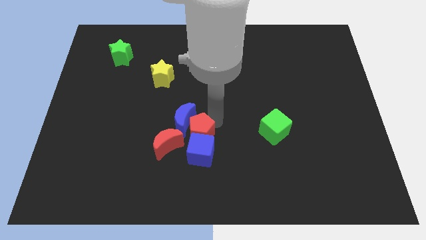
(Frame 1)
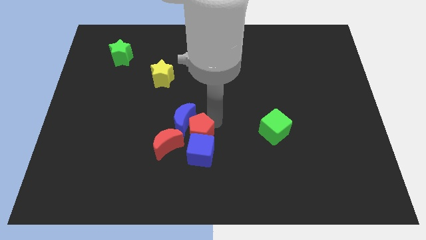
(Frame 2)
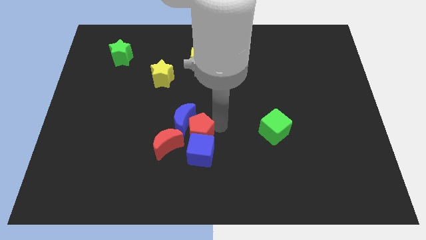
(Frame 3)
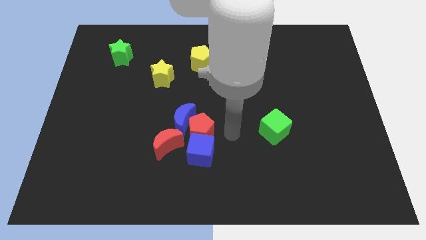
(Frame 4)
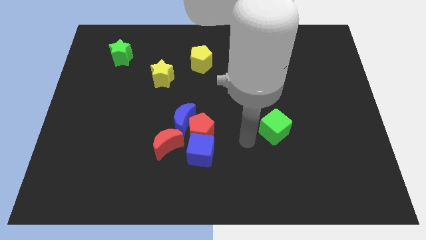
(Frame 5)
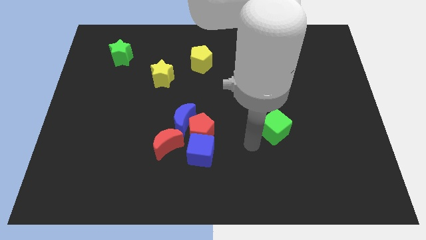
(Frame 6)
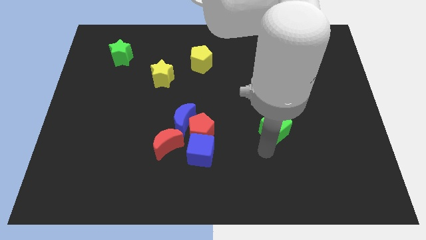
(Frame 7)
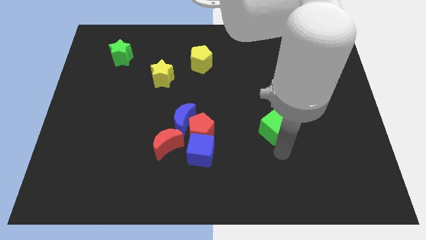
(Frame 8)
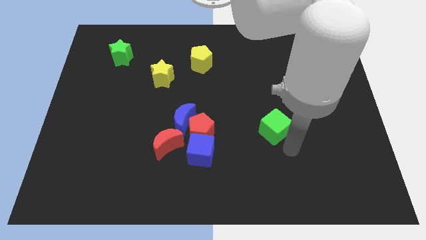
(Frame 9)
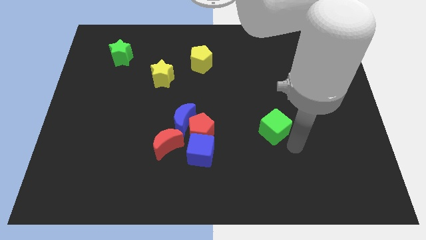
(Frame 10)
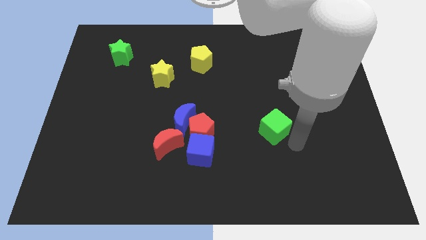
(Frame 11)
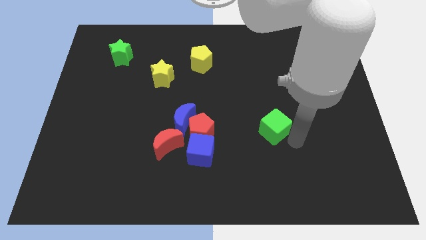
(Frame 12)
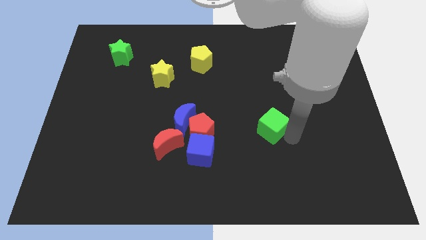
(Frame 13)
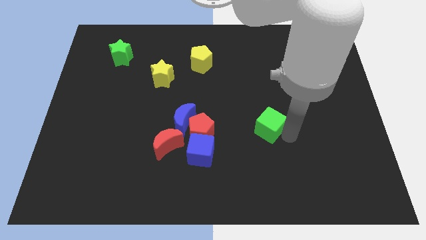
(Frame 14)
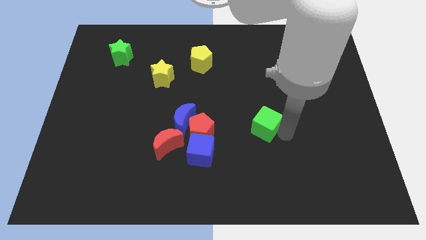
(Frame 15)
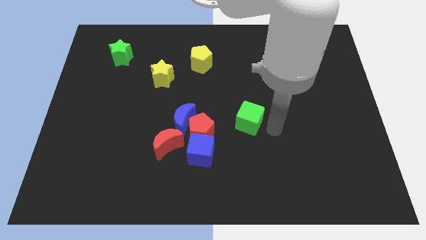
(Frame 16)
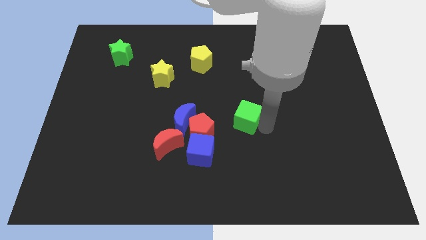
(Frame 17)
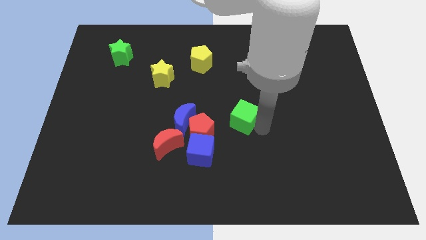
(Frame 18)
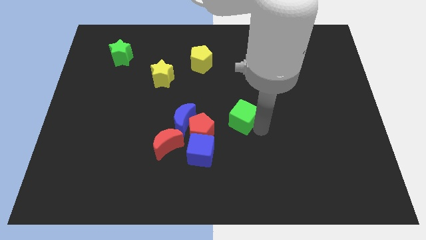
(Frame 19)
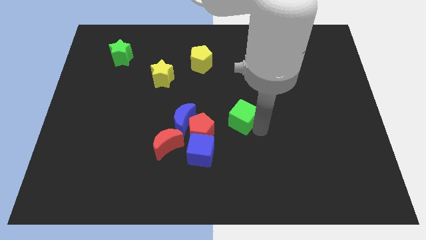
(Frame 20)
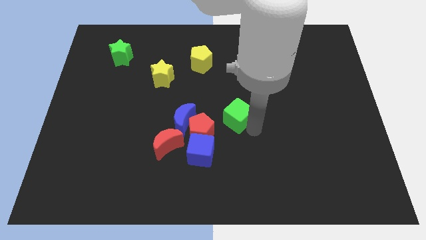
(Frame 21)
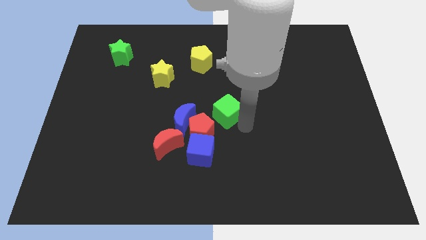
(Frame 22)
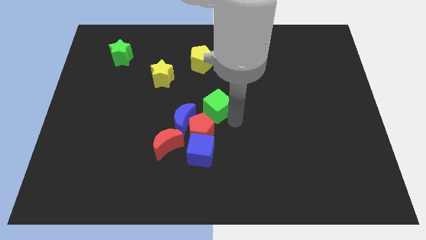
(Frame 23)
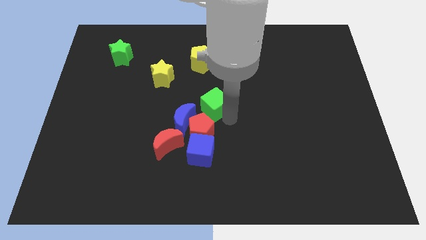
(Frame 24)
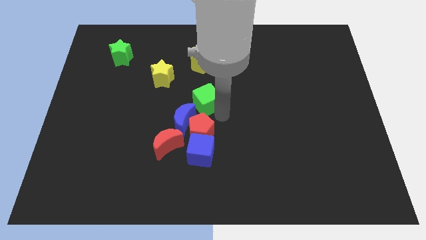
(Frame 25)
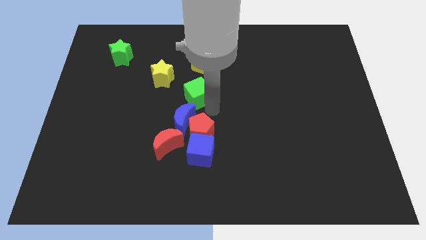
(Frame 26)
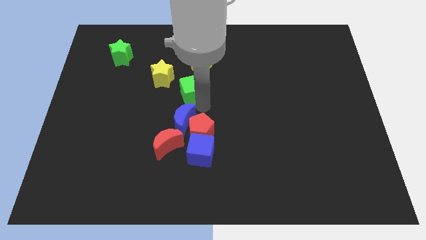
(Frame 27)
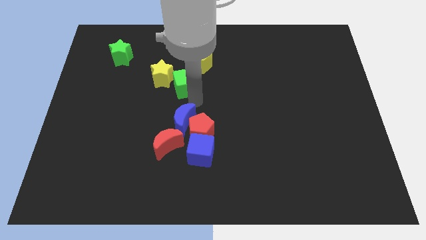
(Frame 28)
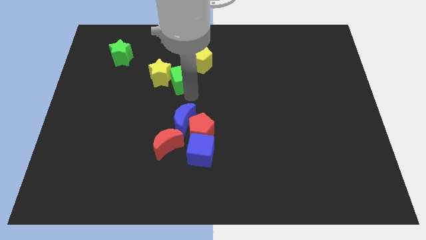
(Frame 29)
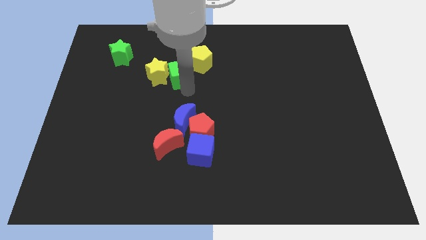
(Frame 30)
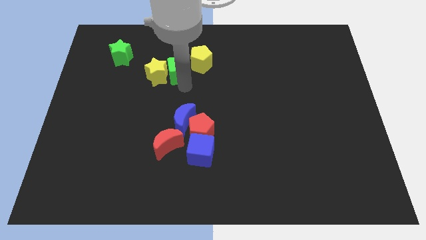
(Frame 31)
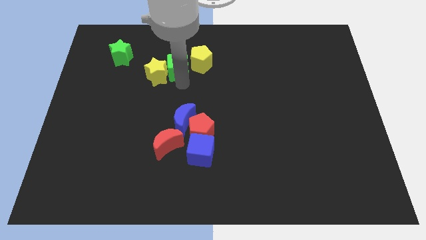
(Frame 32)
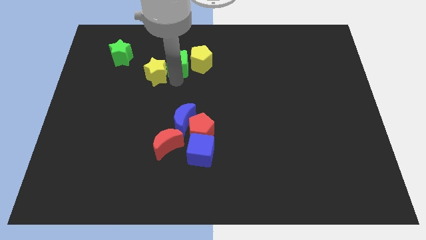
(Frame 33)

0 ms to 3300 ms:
move the green cube in between the yellow blocks

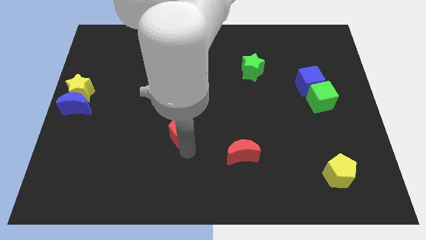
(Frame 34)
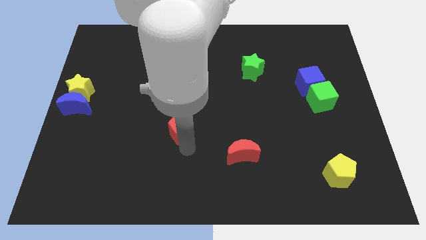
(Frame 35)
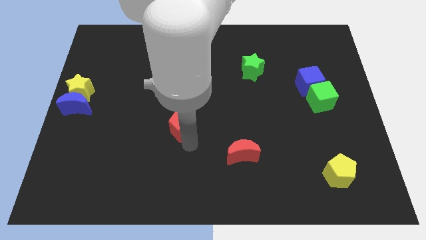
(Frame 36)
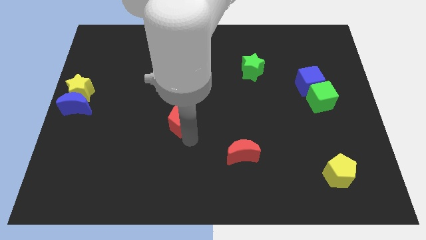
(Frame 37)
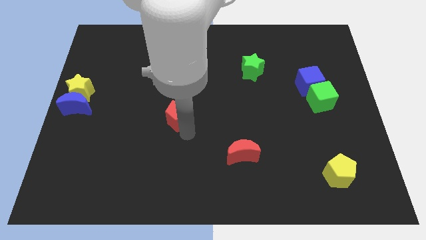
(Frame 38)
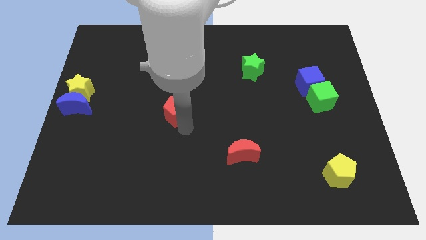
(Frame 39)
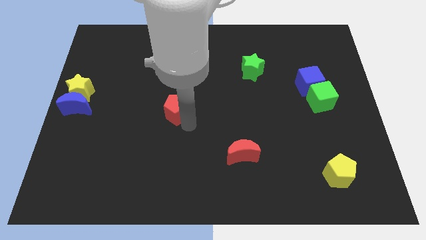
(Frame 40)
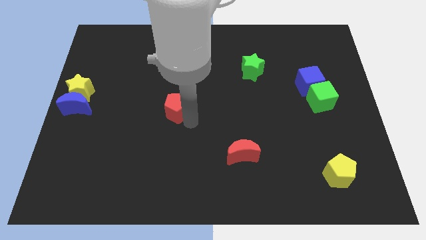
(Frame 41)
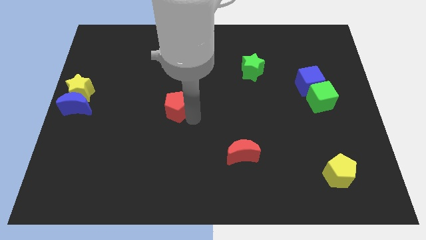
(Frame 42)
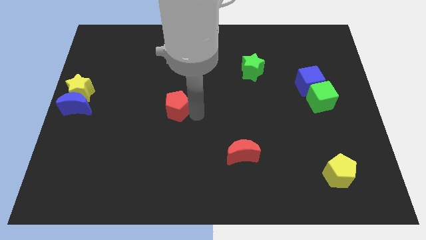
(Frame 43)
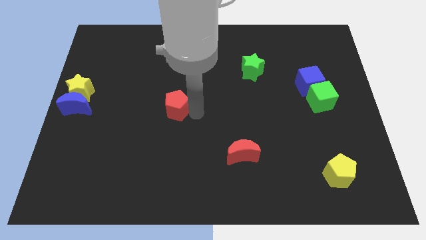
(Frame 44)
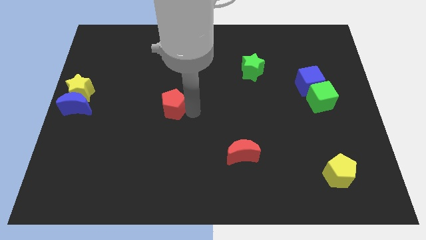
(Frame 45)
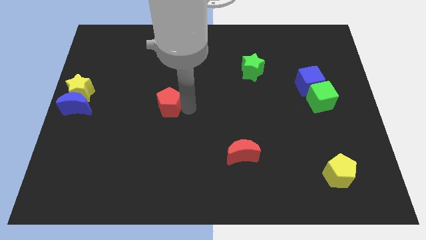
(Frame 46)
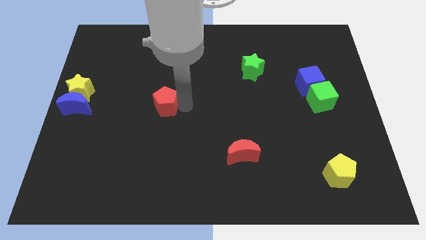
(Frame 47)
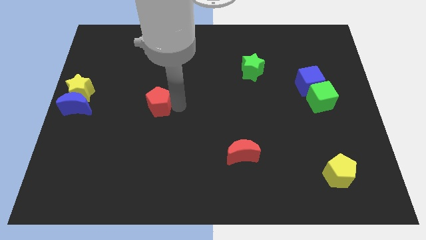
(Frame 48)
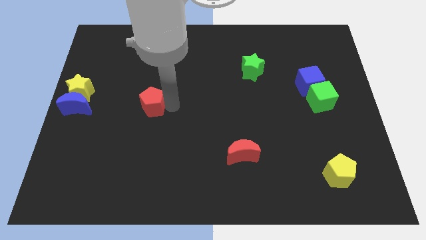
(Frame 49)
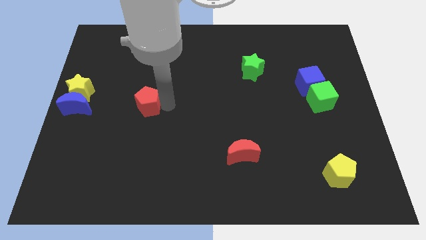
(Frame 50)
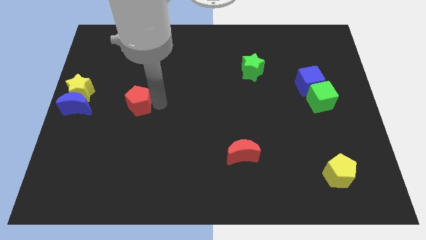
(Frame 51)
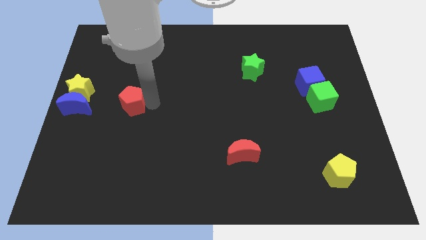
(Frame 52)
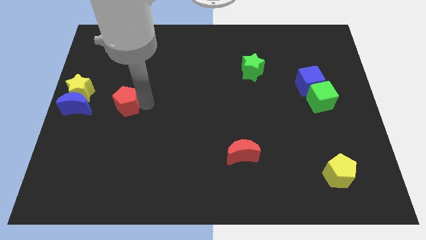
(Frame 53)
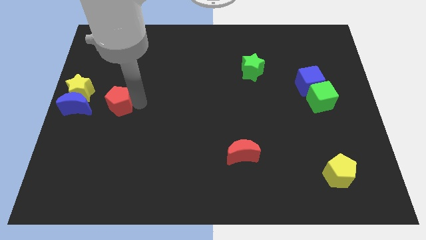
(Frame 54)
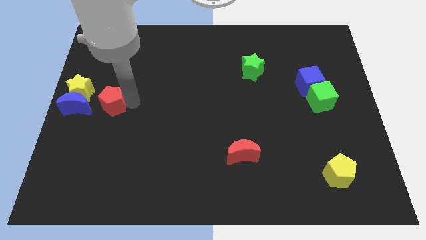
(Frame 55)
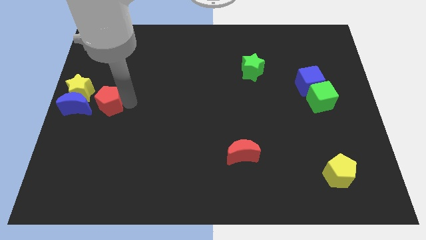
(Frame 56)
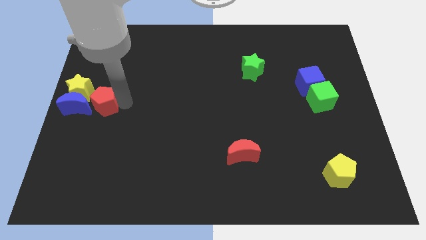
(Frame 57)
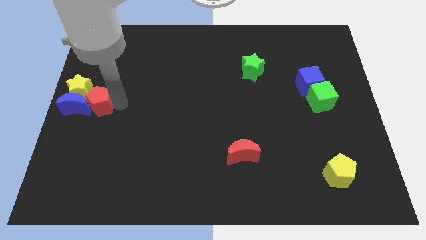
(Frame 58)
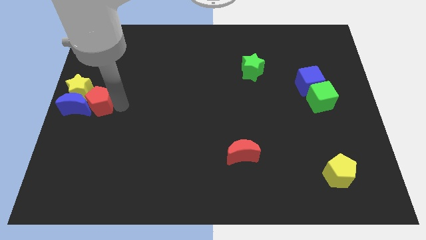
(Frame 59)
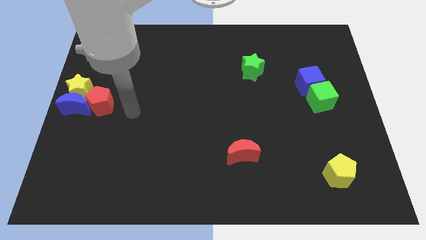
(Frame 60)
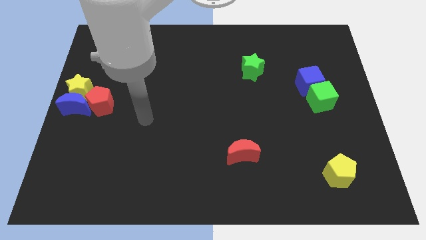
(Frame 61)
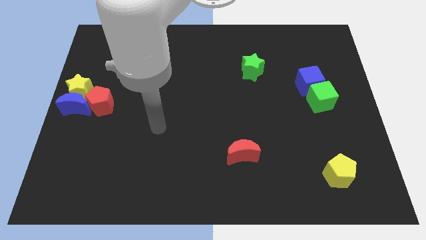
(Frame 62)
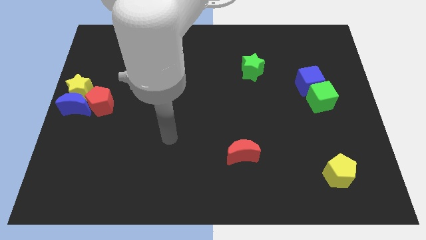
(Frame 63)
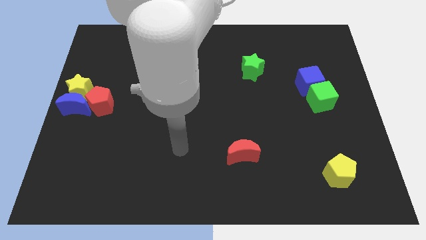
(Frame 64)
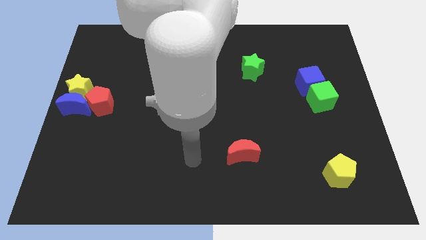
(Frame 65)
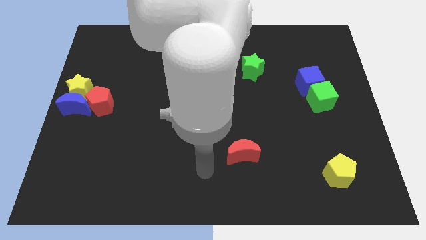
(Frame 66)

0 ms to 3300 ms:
move the red pentagon into the blue moon

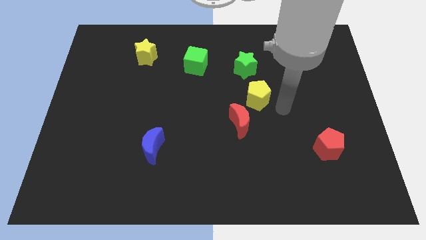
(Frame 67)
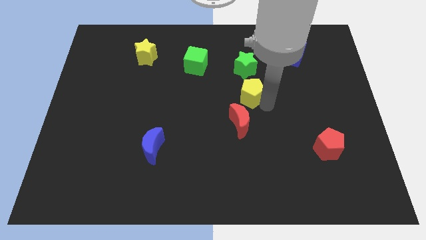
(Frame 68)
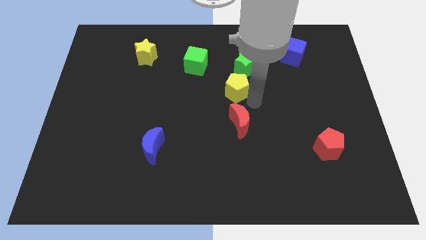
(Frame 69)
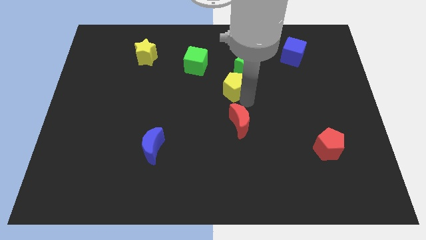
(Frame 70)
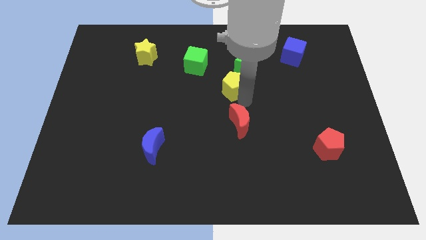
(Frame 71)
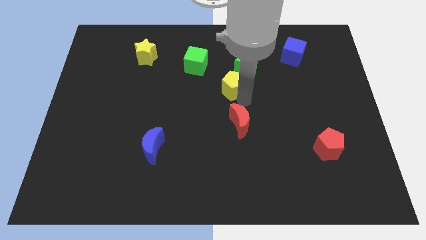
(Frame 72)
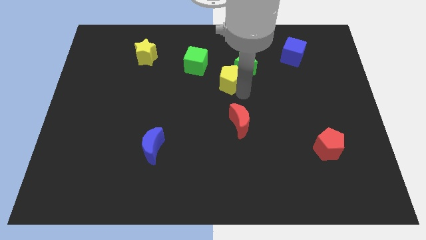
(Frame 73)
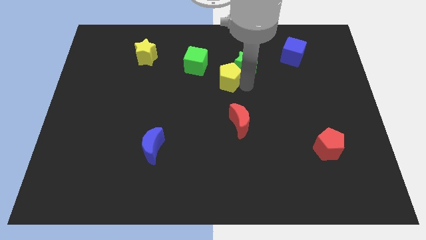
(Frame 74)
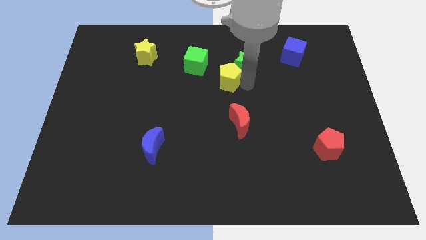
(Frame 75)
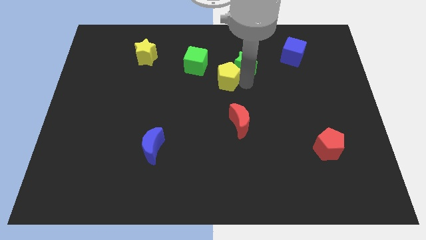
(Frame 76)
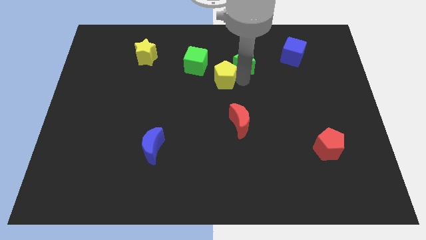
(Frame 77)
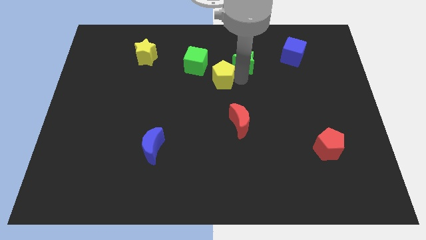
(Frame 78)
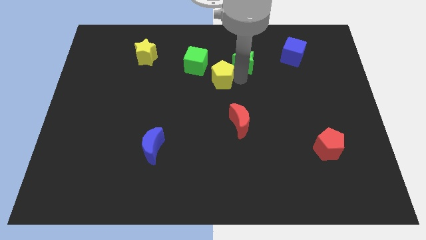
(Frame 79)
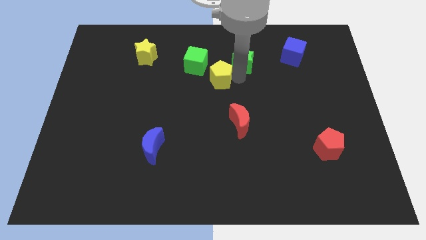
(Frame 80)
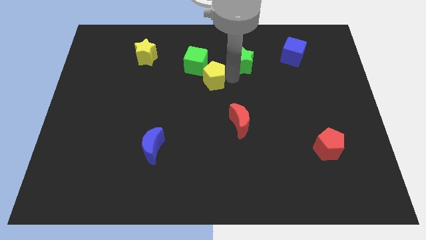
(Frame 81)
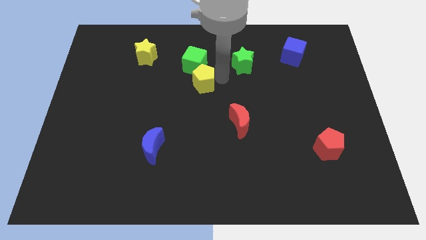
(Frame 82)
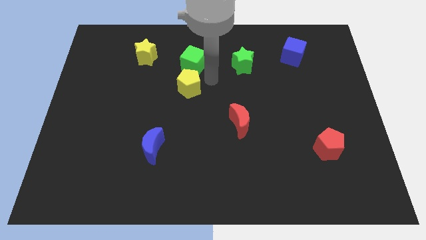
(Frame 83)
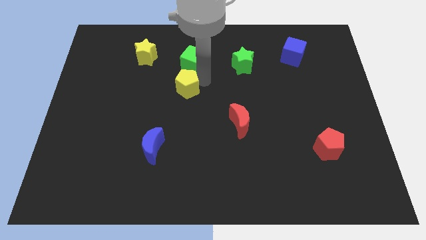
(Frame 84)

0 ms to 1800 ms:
push the yellow pentagon to the bottom side of the green cube

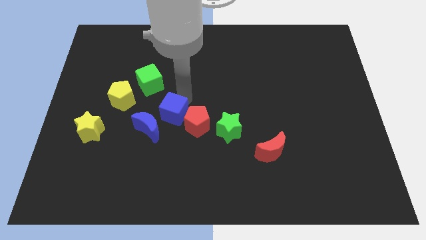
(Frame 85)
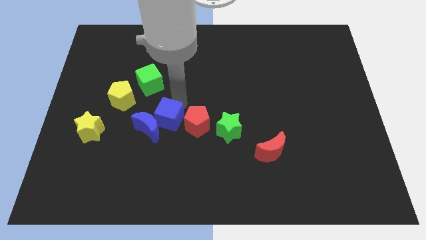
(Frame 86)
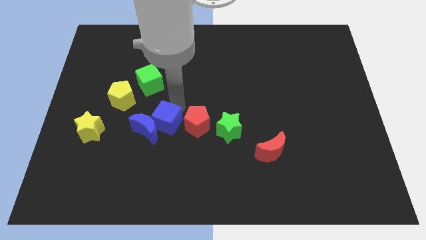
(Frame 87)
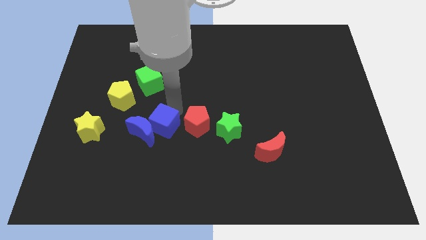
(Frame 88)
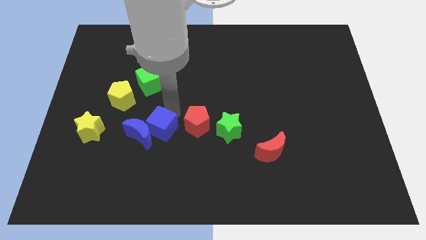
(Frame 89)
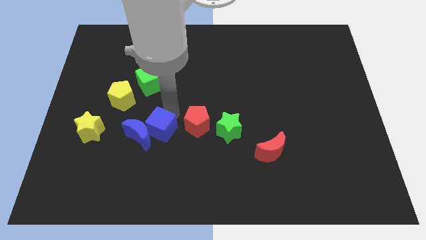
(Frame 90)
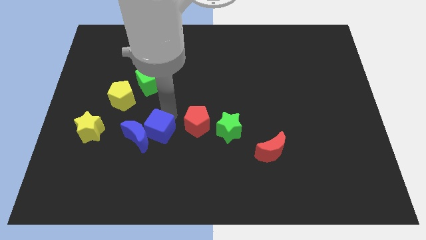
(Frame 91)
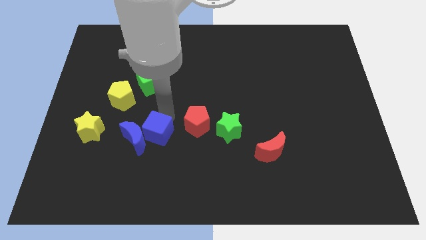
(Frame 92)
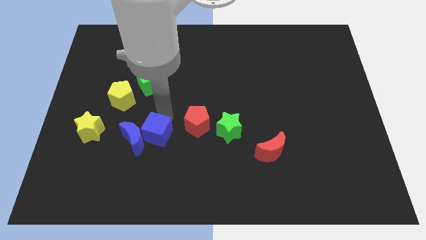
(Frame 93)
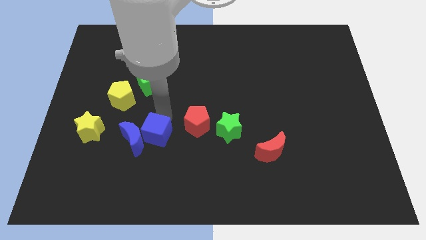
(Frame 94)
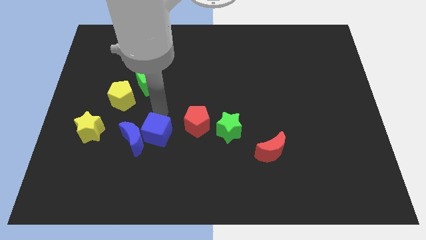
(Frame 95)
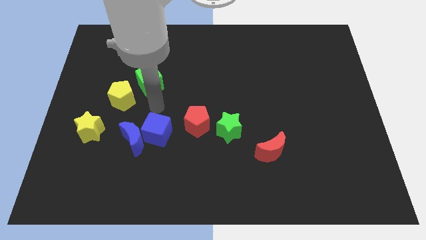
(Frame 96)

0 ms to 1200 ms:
move the blue cube towards the blue crescent
